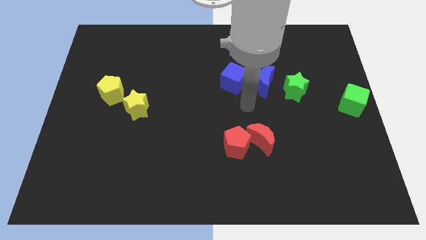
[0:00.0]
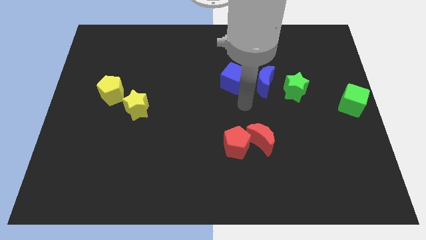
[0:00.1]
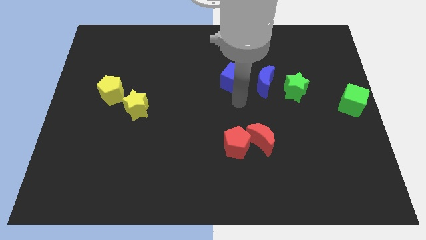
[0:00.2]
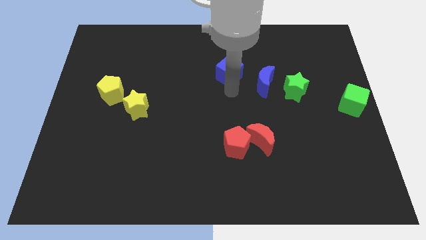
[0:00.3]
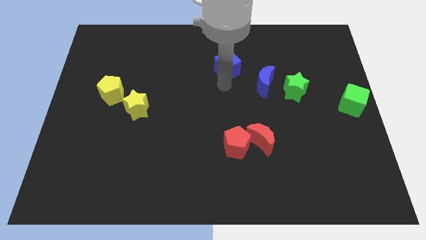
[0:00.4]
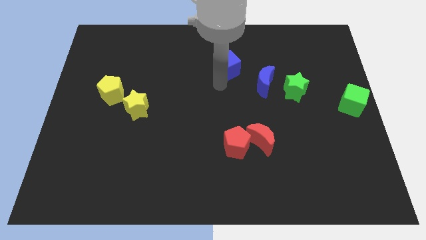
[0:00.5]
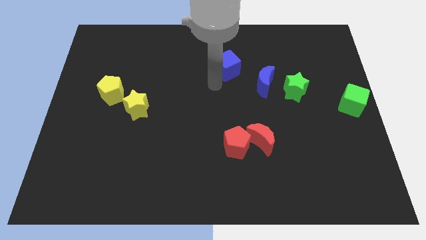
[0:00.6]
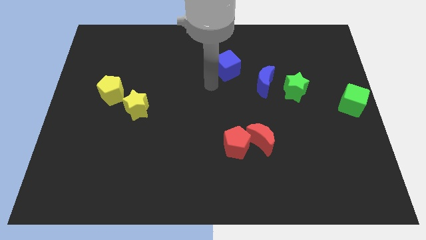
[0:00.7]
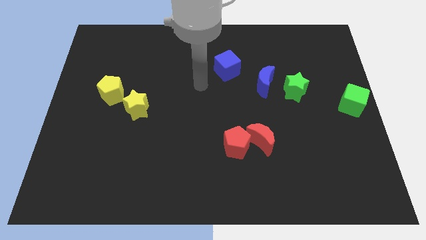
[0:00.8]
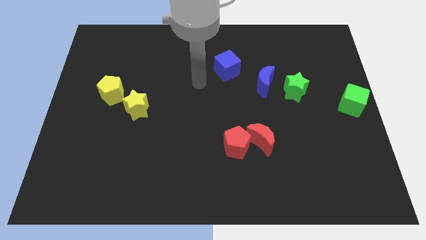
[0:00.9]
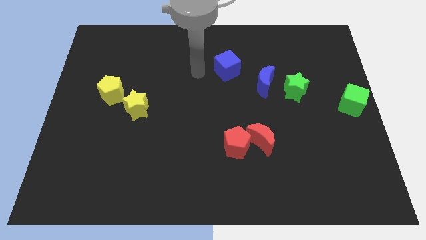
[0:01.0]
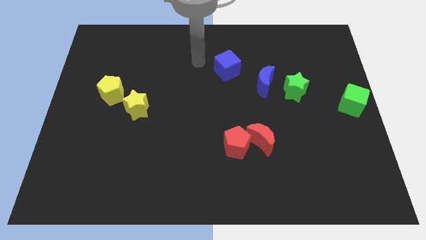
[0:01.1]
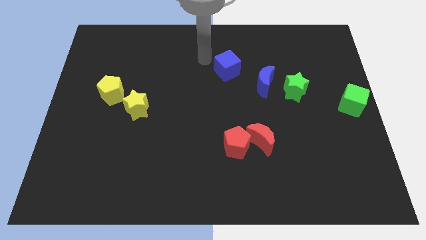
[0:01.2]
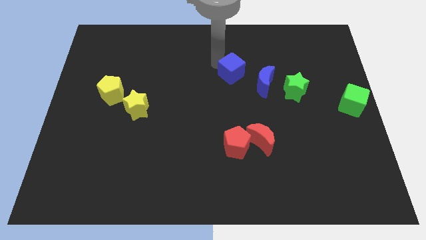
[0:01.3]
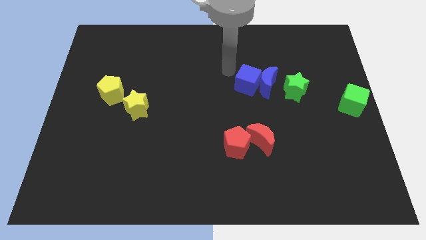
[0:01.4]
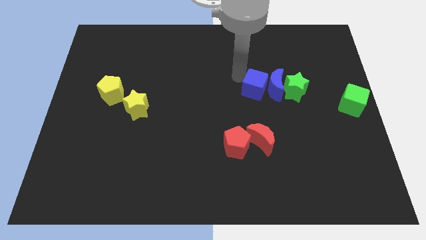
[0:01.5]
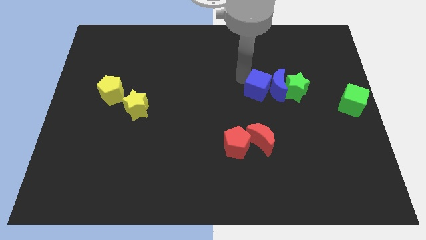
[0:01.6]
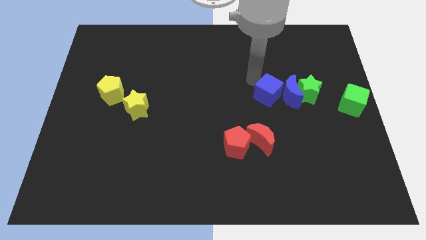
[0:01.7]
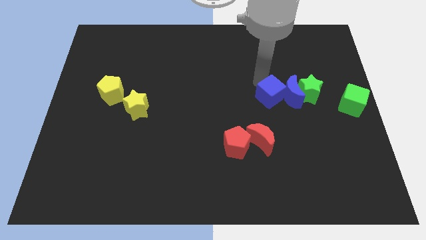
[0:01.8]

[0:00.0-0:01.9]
move the blue cube into the blue moon

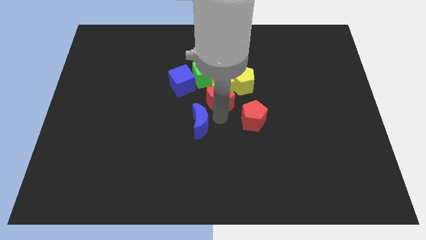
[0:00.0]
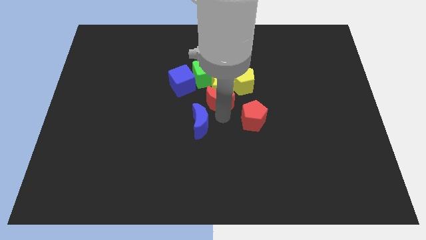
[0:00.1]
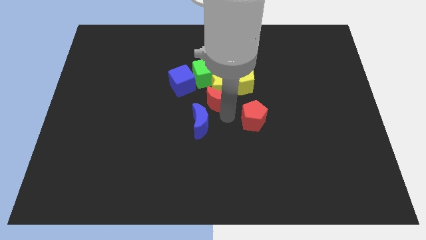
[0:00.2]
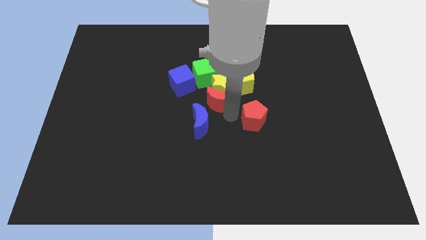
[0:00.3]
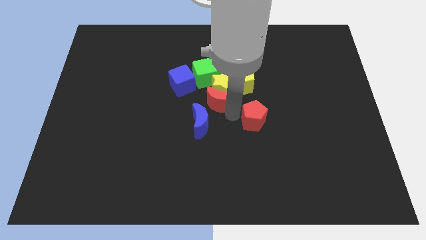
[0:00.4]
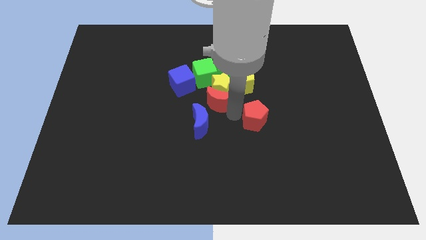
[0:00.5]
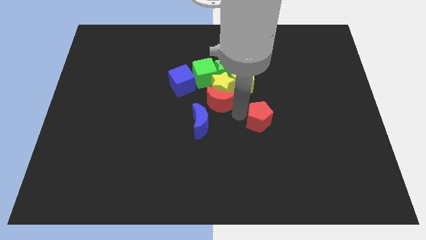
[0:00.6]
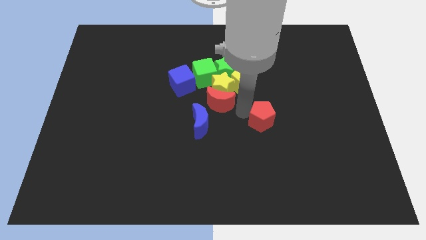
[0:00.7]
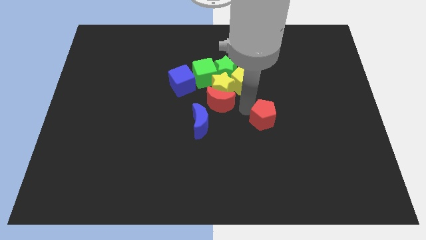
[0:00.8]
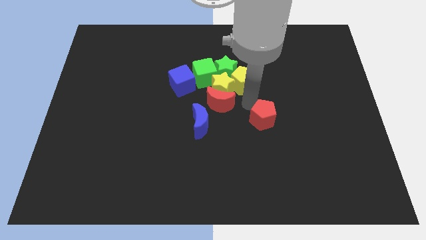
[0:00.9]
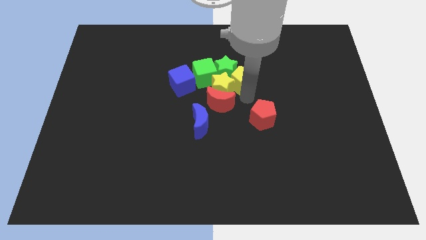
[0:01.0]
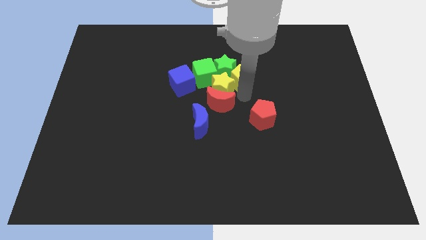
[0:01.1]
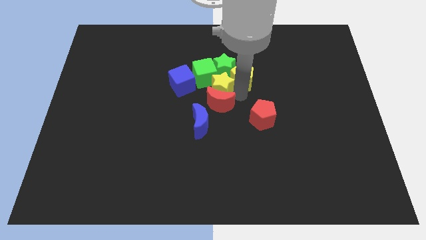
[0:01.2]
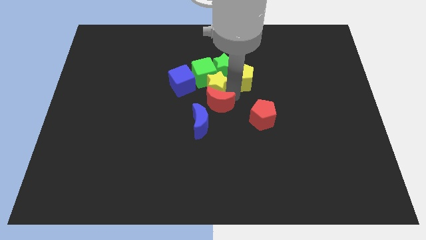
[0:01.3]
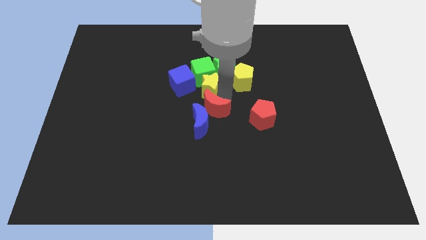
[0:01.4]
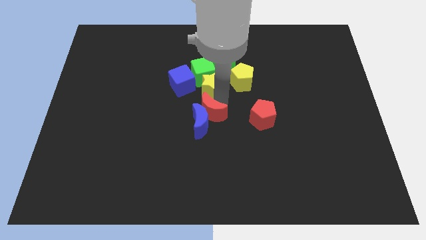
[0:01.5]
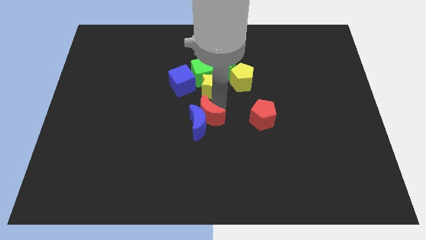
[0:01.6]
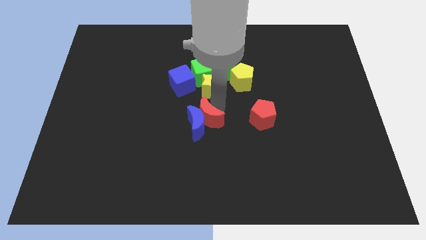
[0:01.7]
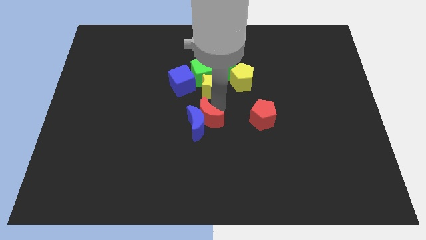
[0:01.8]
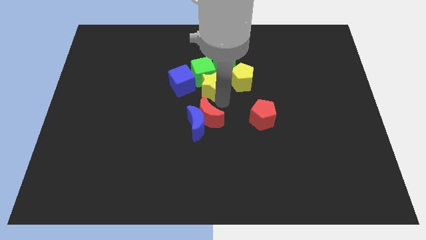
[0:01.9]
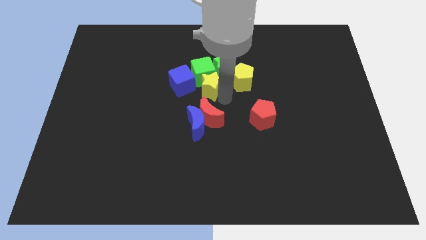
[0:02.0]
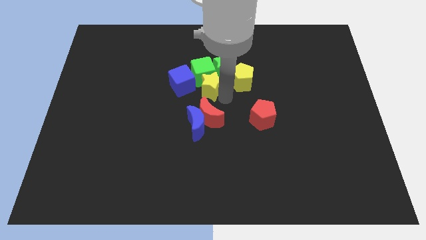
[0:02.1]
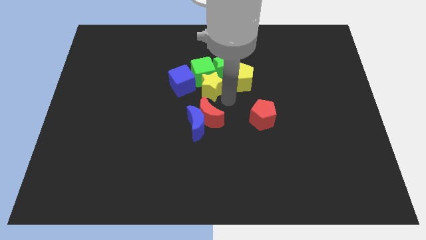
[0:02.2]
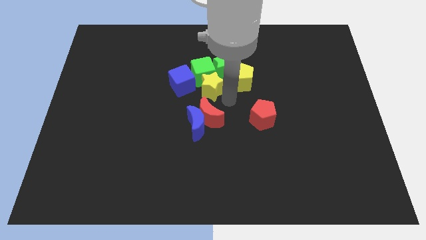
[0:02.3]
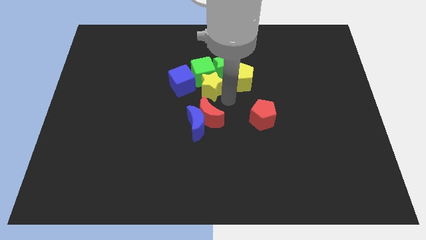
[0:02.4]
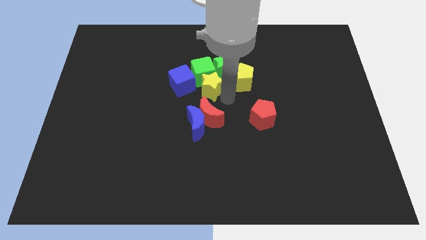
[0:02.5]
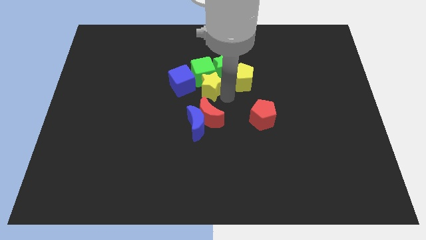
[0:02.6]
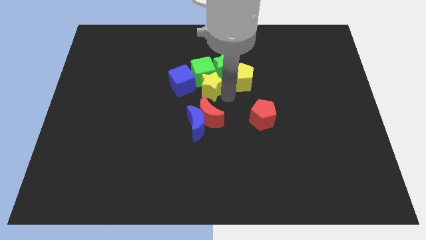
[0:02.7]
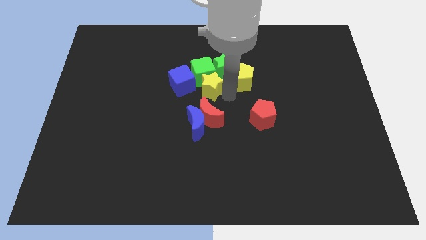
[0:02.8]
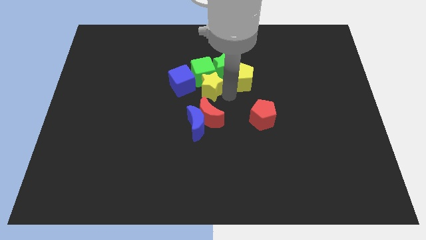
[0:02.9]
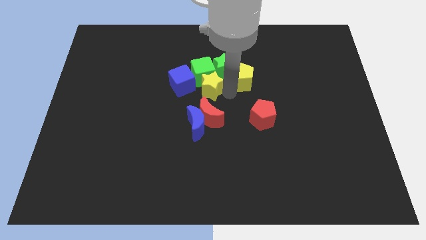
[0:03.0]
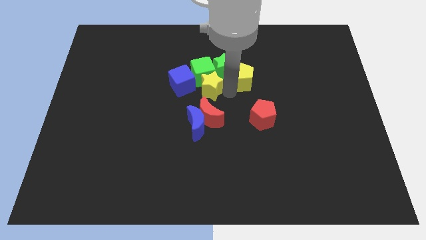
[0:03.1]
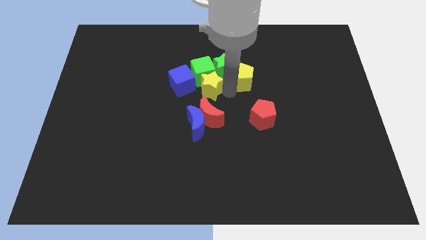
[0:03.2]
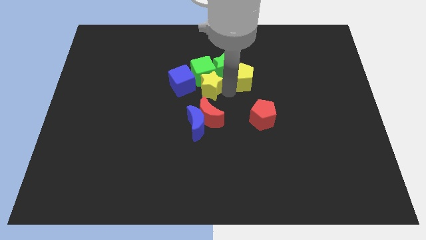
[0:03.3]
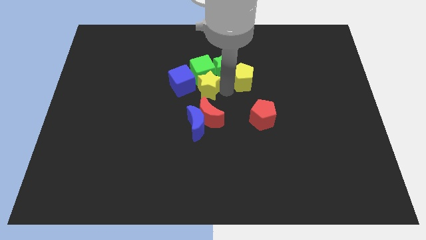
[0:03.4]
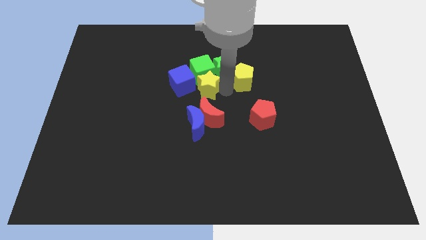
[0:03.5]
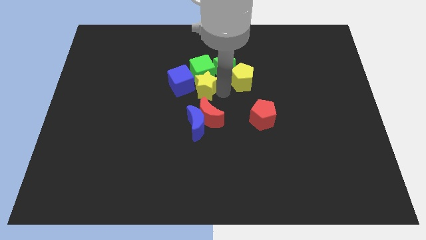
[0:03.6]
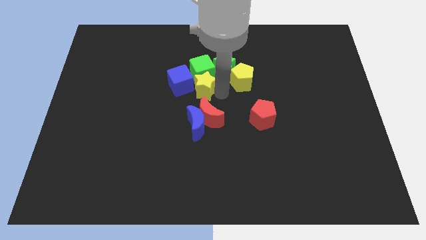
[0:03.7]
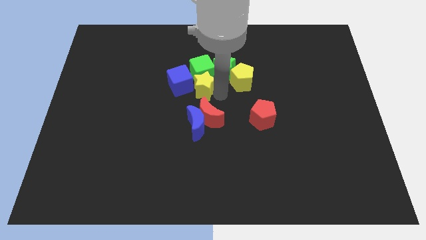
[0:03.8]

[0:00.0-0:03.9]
separate yellow star from the red moon

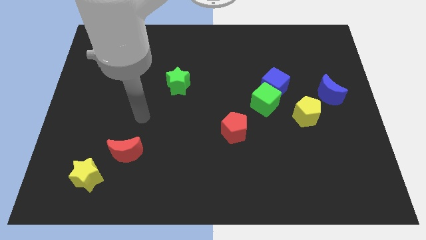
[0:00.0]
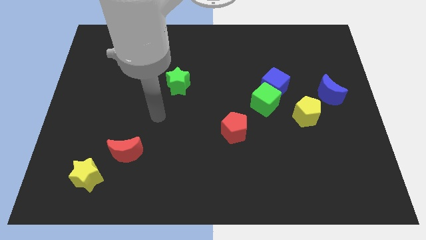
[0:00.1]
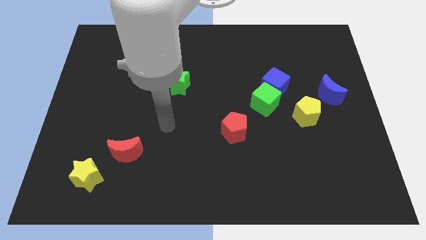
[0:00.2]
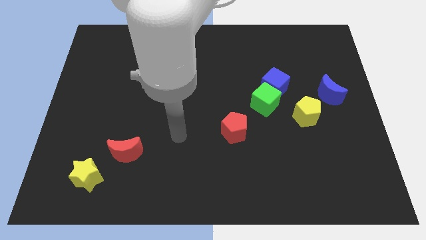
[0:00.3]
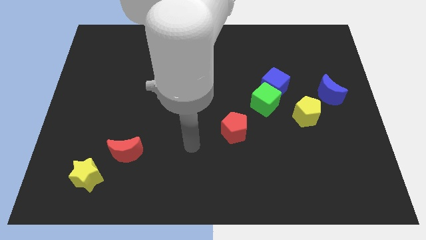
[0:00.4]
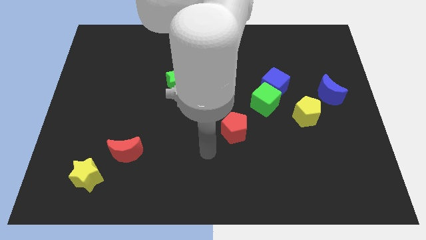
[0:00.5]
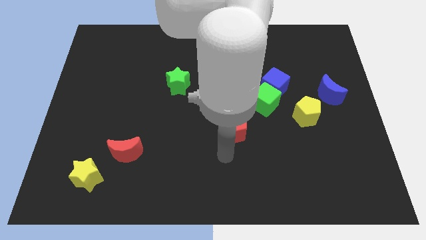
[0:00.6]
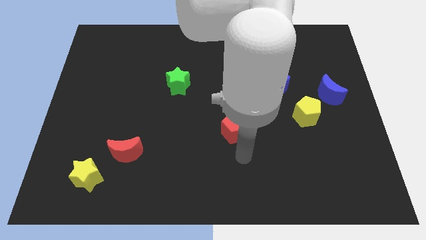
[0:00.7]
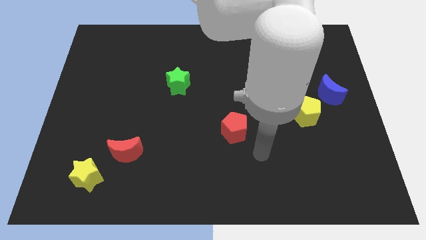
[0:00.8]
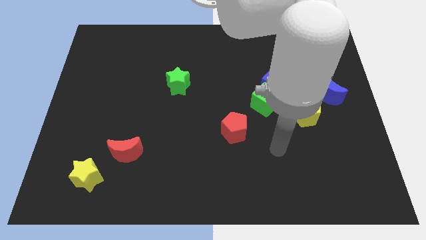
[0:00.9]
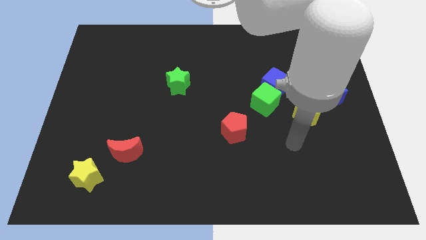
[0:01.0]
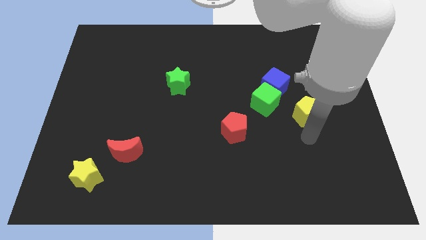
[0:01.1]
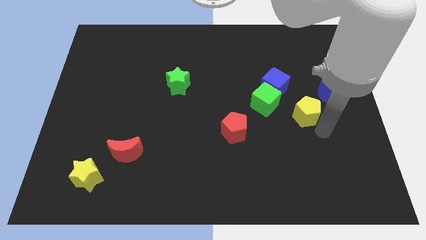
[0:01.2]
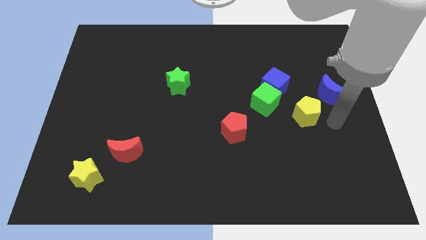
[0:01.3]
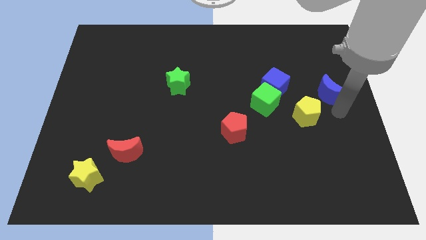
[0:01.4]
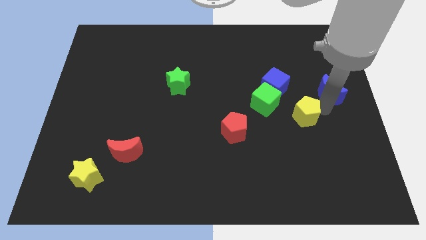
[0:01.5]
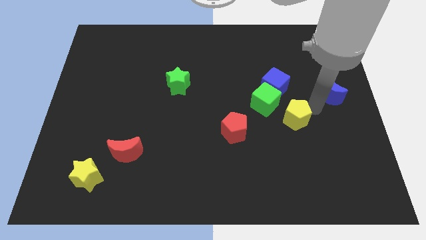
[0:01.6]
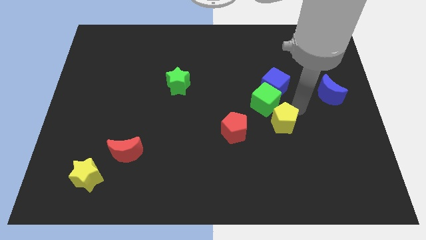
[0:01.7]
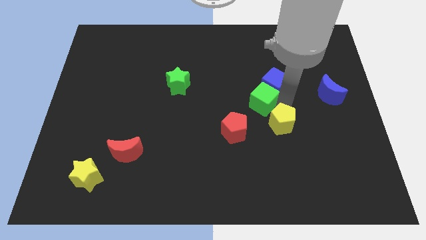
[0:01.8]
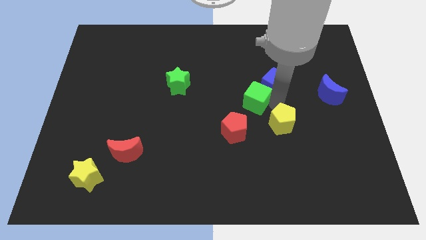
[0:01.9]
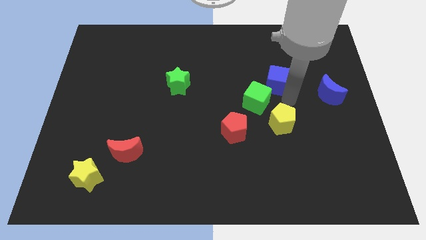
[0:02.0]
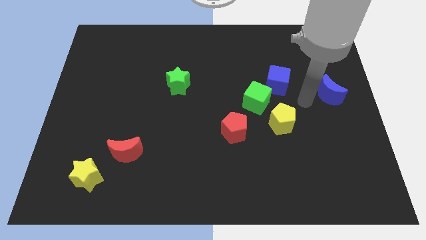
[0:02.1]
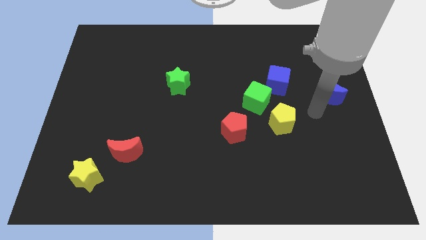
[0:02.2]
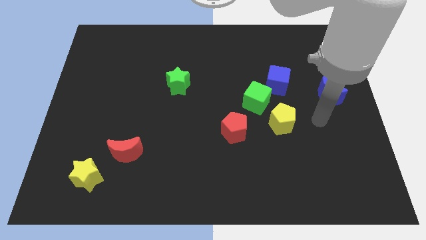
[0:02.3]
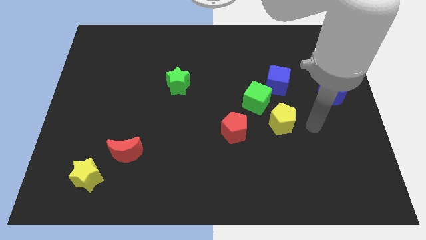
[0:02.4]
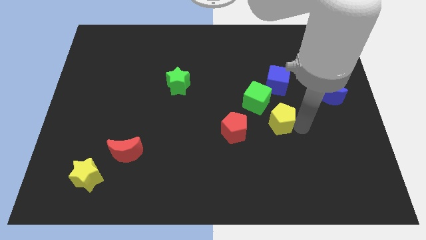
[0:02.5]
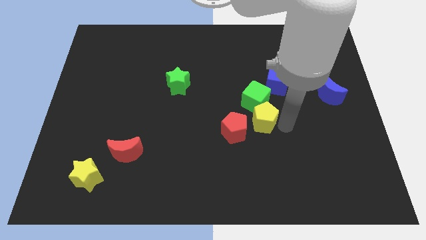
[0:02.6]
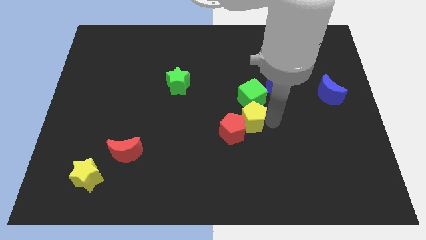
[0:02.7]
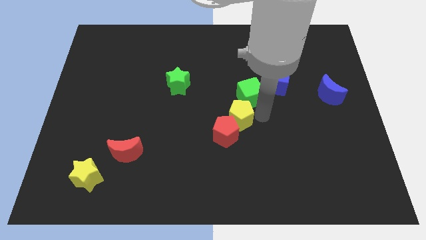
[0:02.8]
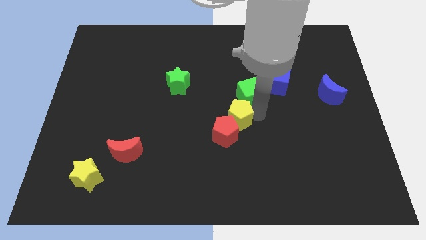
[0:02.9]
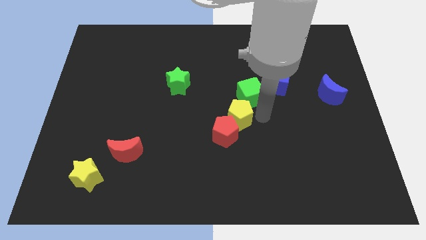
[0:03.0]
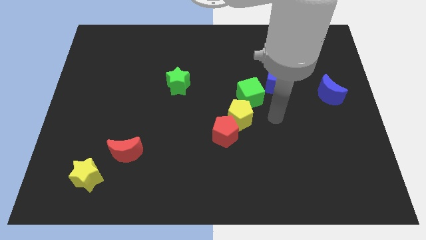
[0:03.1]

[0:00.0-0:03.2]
move the yellow pentagon between the green cube and red pentagon
